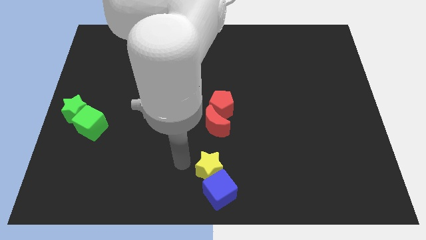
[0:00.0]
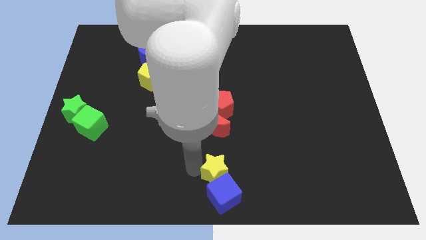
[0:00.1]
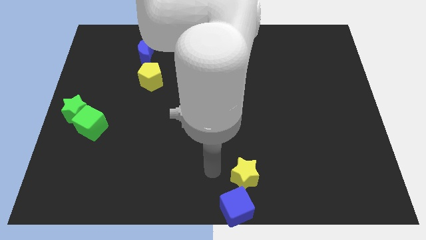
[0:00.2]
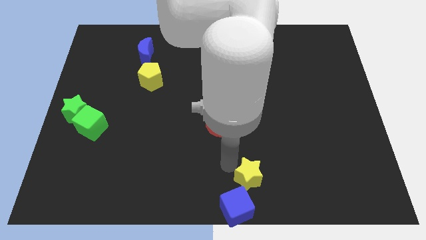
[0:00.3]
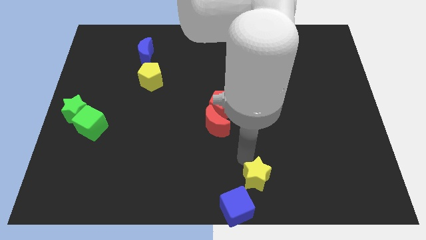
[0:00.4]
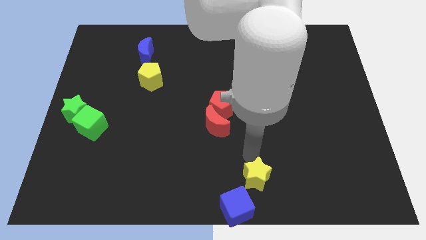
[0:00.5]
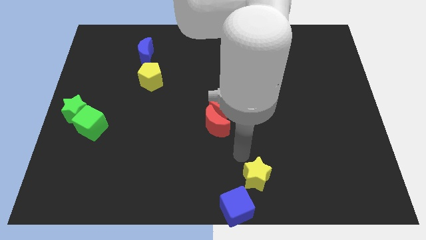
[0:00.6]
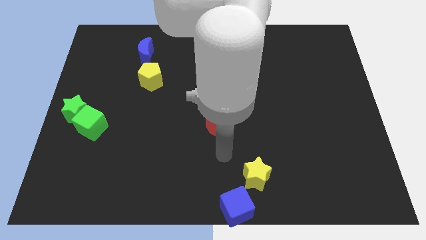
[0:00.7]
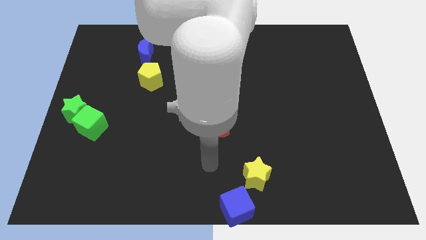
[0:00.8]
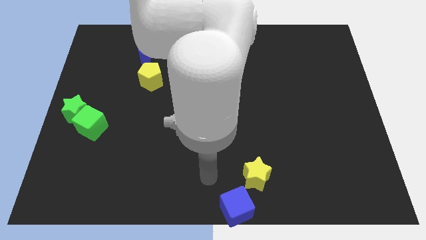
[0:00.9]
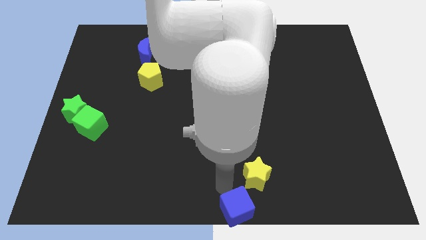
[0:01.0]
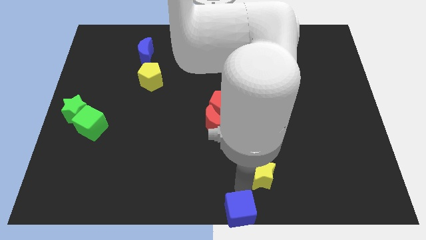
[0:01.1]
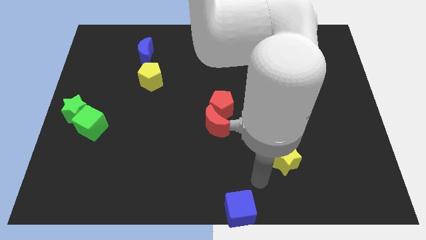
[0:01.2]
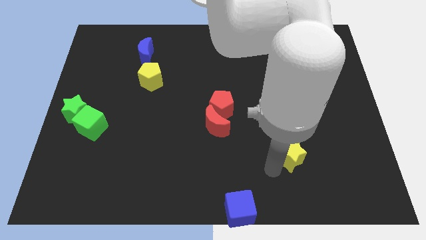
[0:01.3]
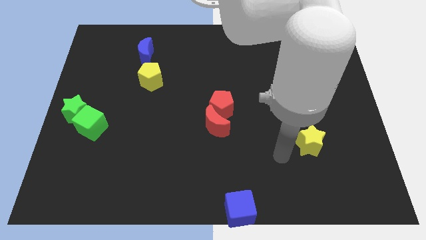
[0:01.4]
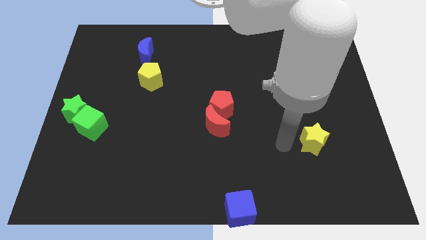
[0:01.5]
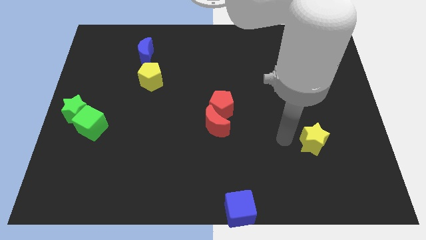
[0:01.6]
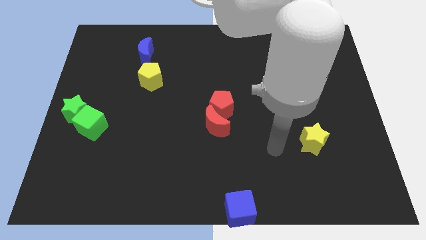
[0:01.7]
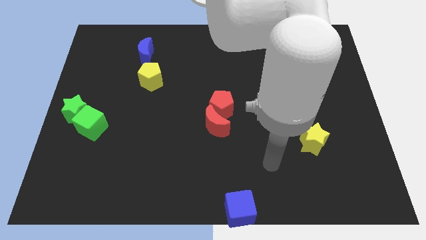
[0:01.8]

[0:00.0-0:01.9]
separate the yellow star from the blue cube

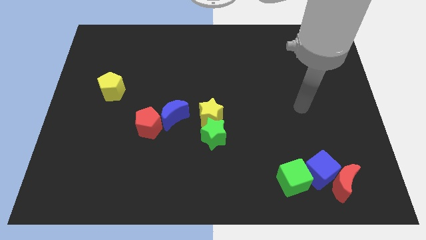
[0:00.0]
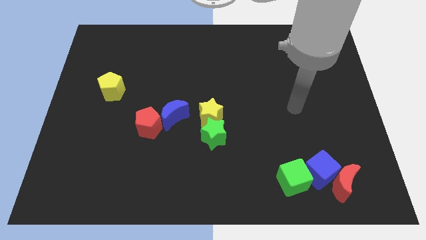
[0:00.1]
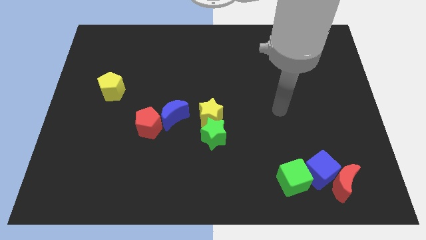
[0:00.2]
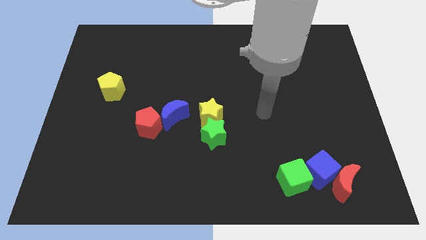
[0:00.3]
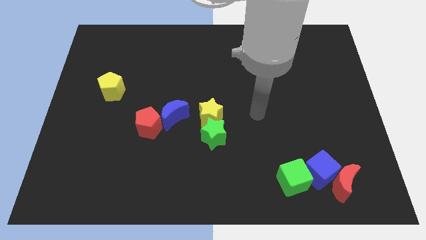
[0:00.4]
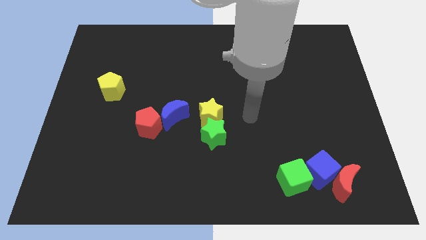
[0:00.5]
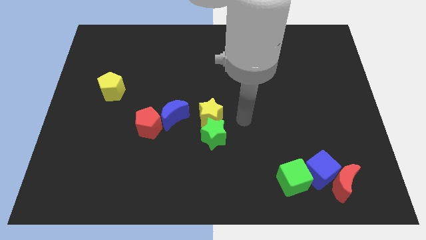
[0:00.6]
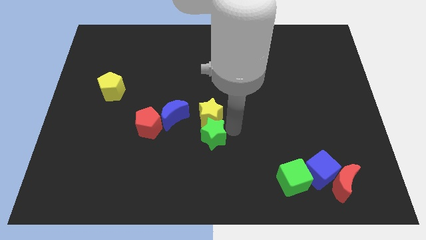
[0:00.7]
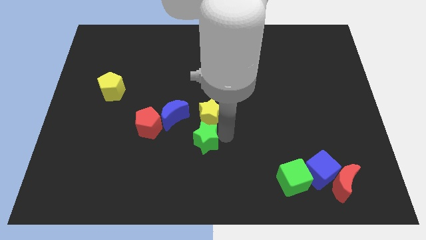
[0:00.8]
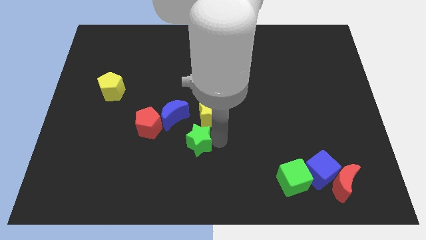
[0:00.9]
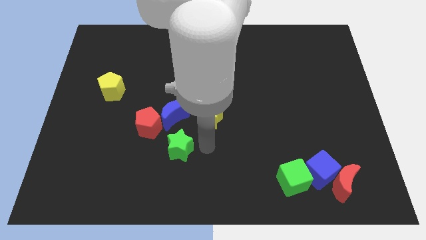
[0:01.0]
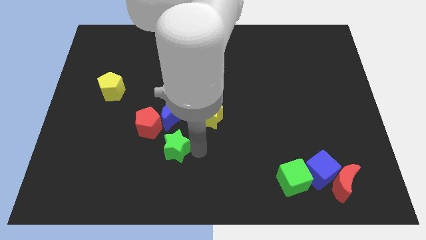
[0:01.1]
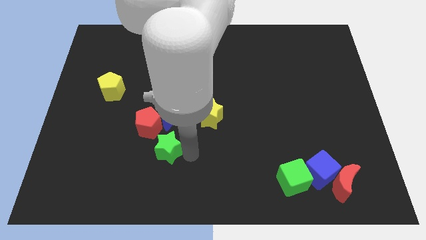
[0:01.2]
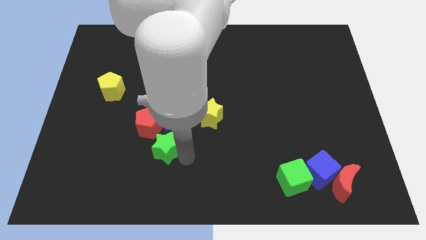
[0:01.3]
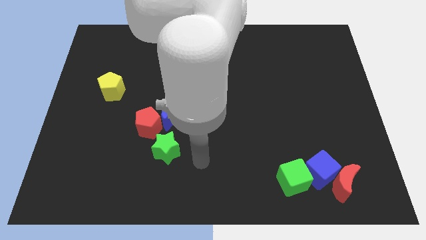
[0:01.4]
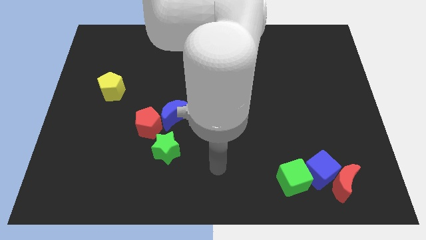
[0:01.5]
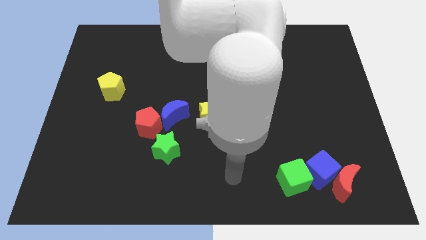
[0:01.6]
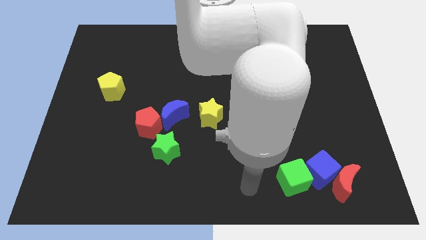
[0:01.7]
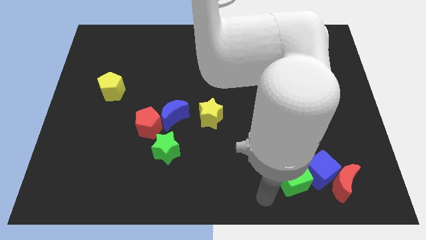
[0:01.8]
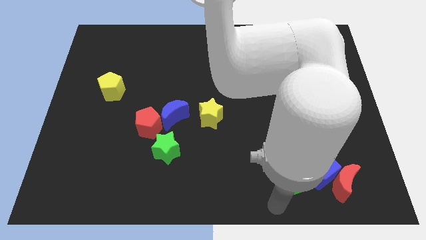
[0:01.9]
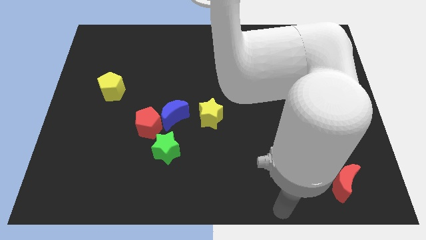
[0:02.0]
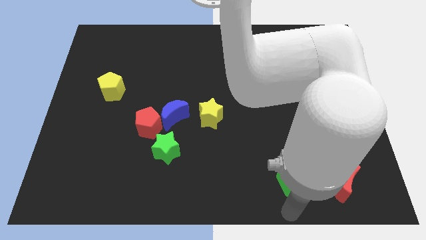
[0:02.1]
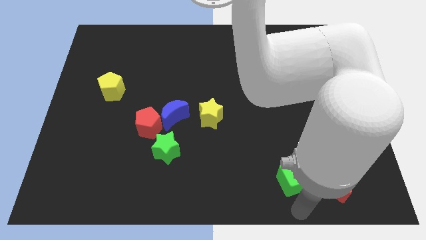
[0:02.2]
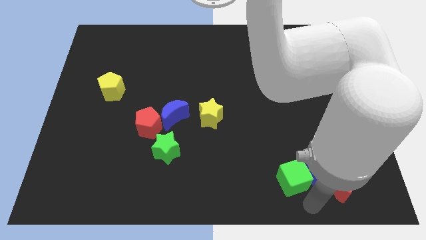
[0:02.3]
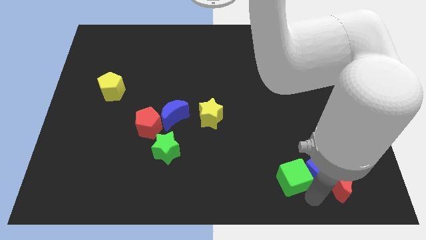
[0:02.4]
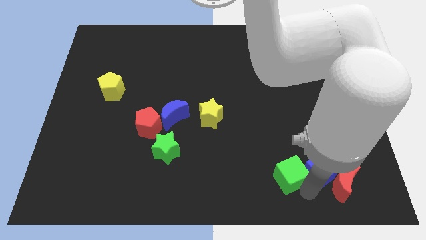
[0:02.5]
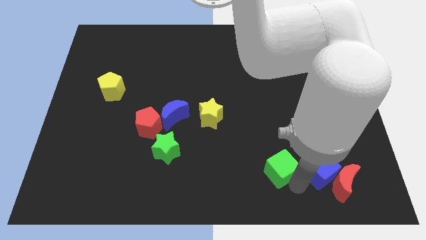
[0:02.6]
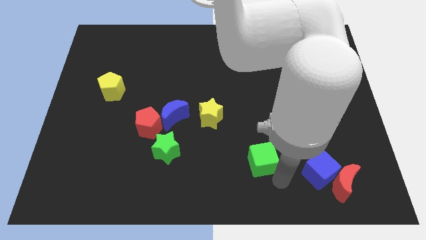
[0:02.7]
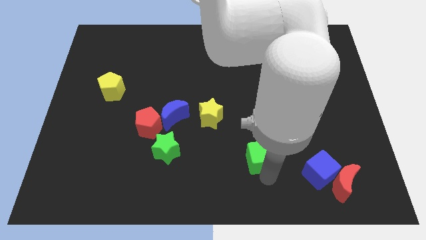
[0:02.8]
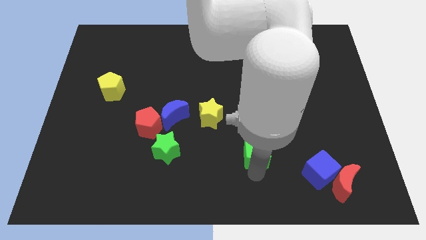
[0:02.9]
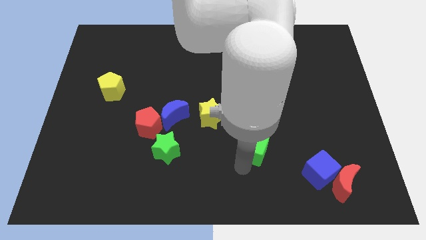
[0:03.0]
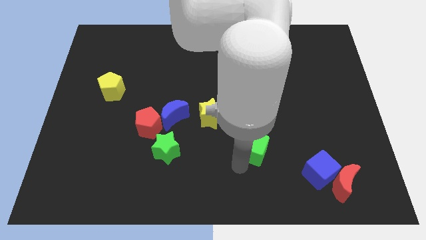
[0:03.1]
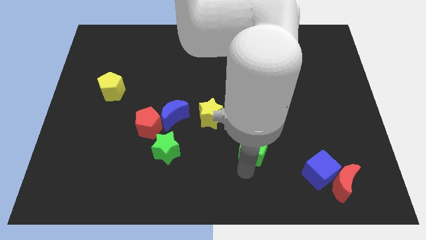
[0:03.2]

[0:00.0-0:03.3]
move the both green blocks horizontally to each other

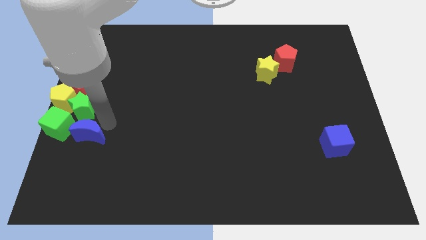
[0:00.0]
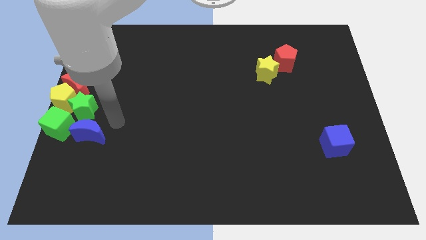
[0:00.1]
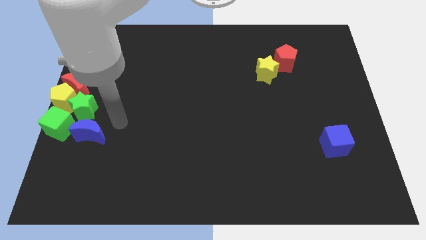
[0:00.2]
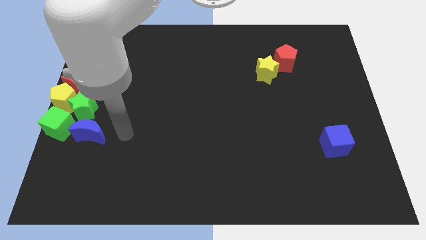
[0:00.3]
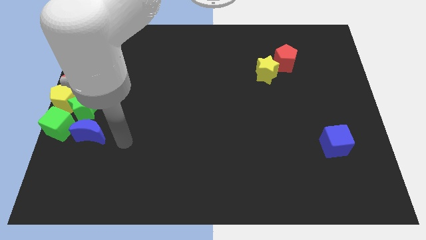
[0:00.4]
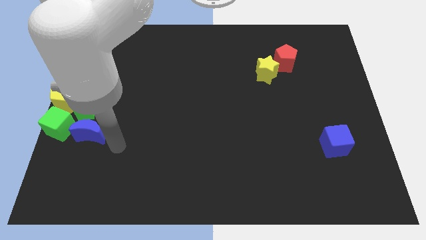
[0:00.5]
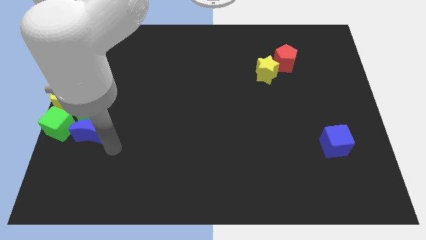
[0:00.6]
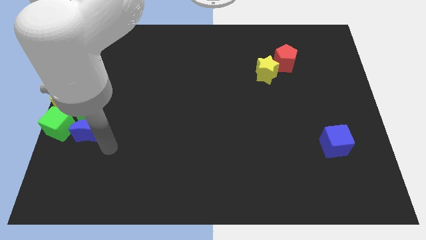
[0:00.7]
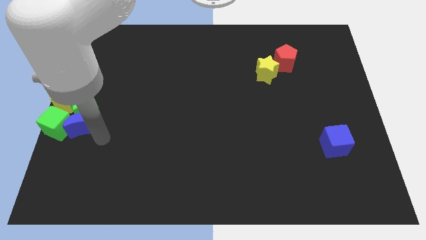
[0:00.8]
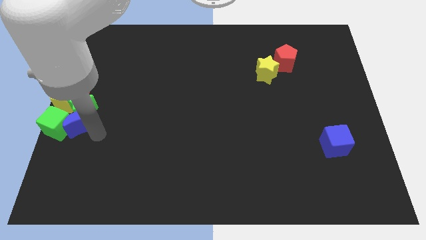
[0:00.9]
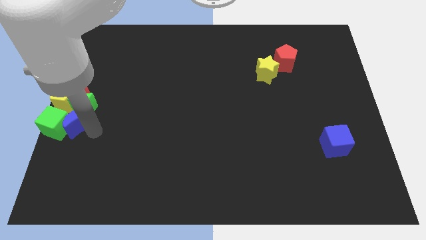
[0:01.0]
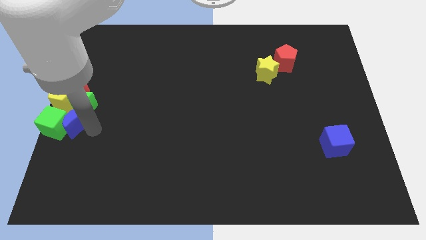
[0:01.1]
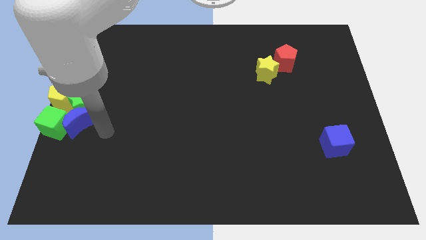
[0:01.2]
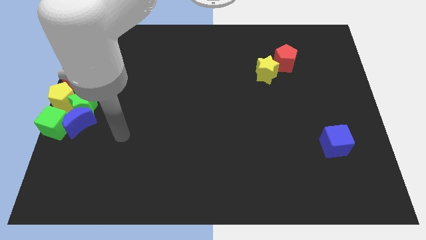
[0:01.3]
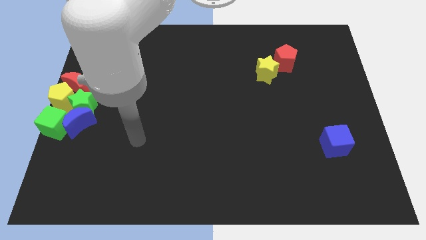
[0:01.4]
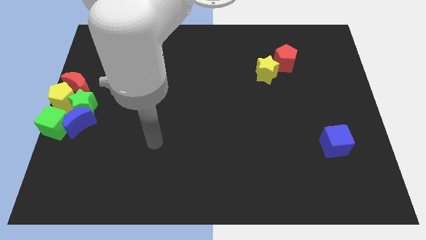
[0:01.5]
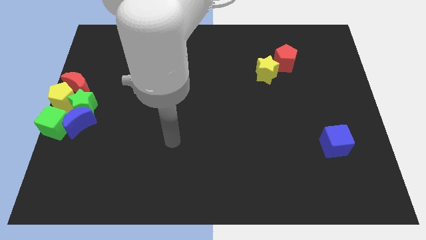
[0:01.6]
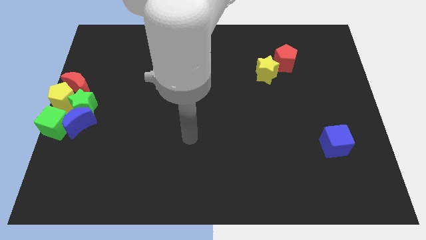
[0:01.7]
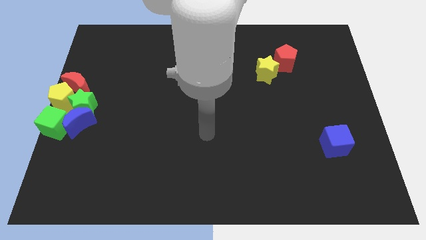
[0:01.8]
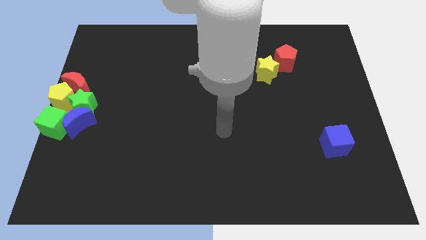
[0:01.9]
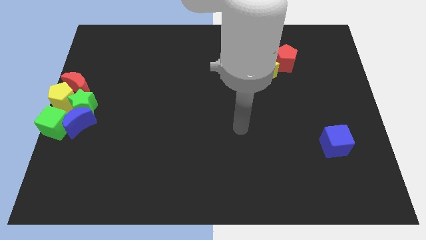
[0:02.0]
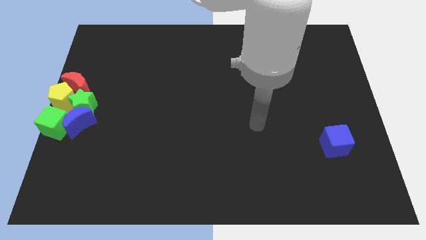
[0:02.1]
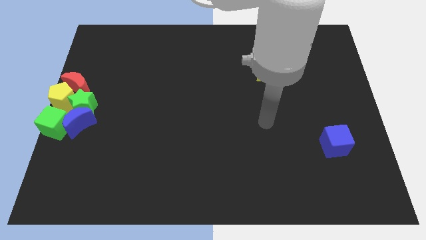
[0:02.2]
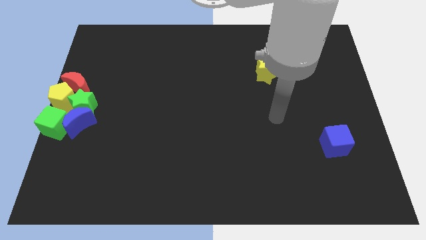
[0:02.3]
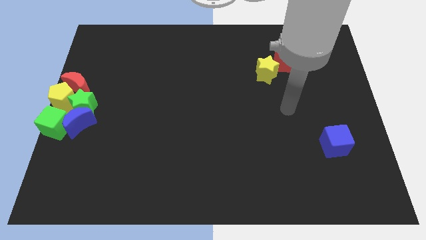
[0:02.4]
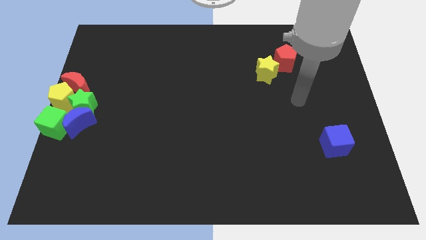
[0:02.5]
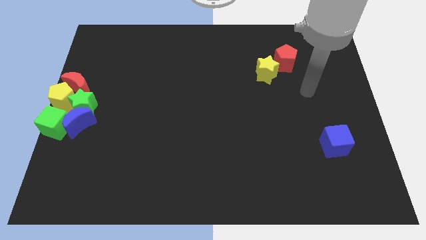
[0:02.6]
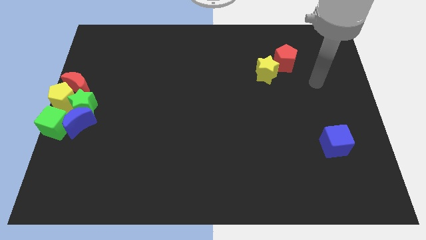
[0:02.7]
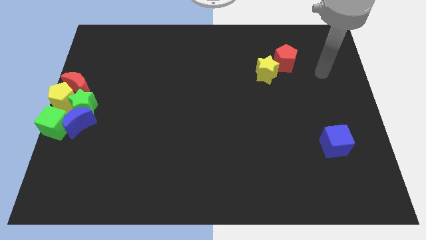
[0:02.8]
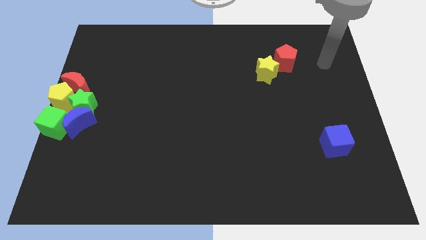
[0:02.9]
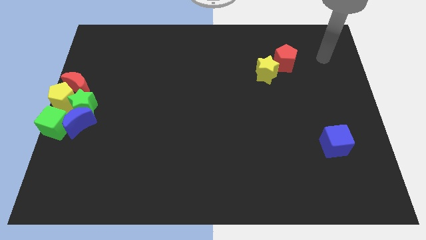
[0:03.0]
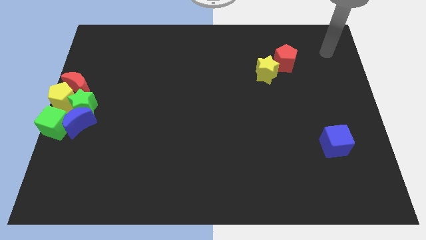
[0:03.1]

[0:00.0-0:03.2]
push the blue crescent into the green blocks

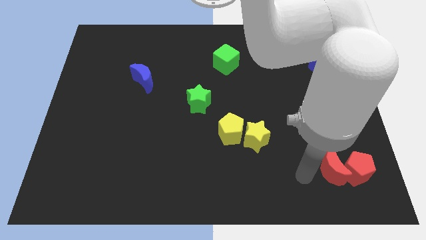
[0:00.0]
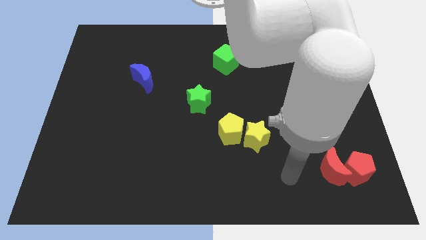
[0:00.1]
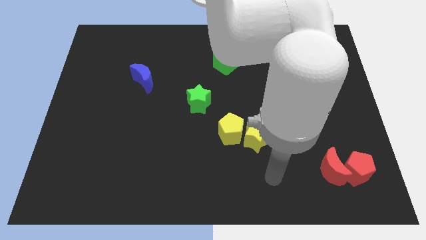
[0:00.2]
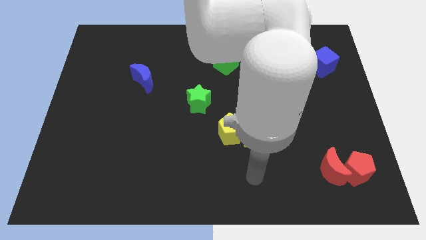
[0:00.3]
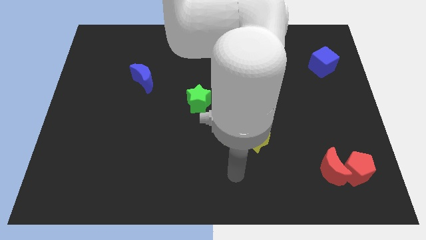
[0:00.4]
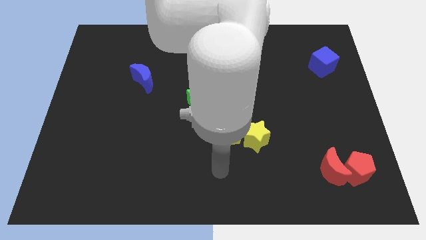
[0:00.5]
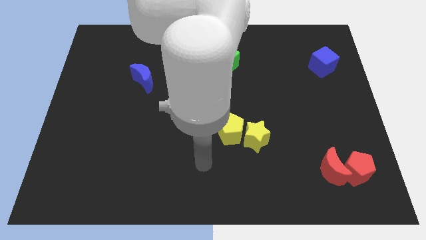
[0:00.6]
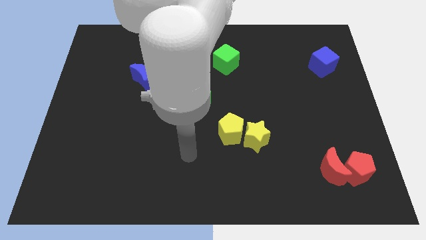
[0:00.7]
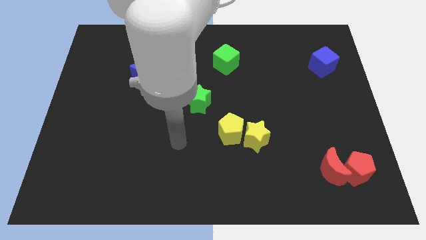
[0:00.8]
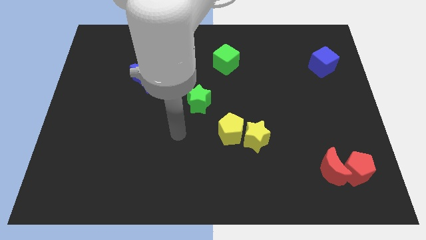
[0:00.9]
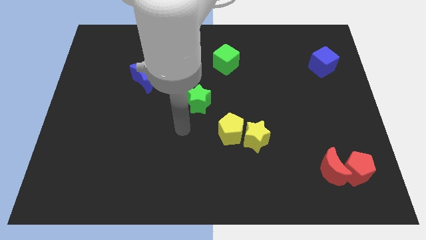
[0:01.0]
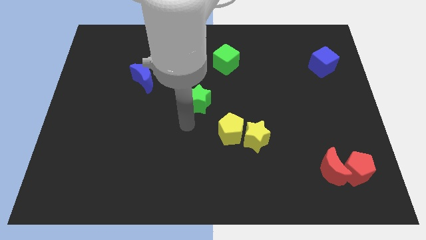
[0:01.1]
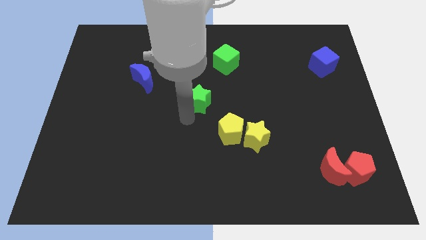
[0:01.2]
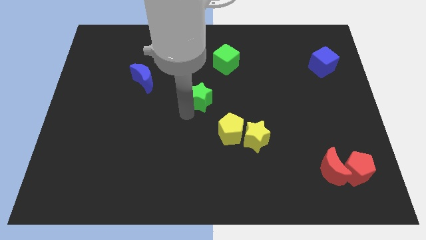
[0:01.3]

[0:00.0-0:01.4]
move your arm to the bottom left of the green star
